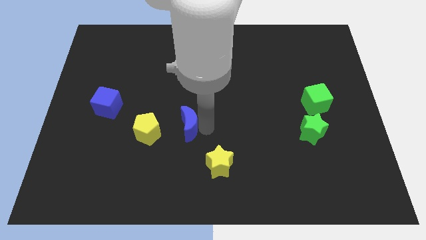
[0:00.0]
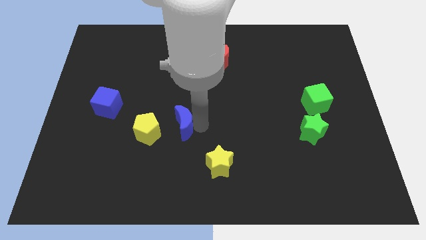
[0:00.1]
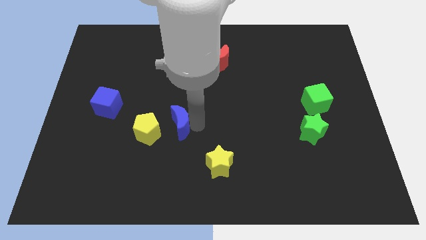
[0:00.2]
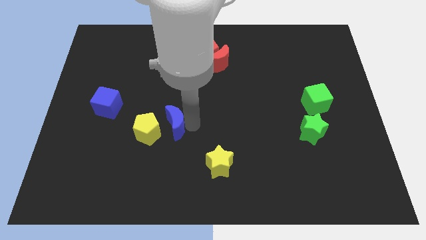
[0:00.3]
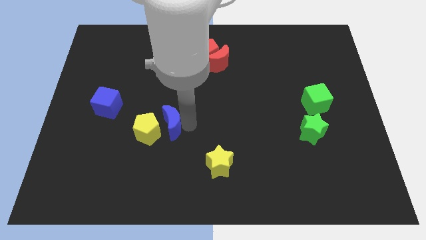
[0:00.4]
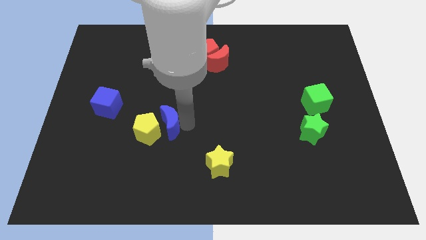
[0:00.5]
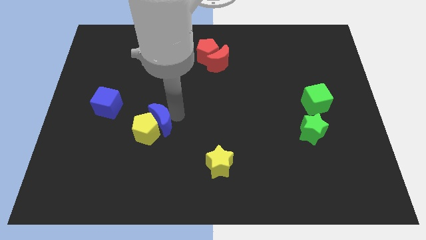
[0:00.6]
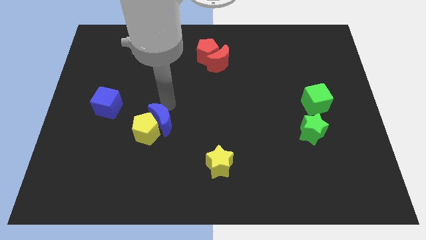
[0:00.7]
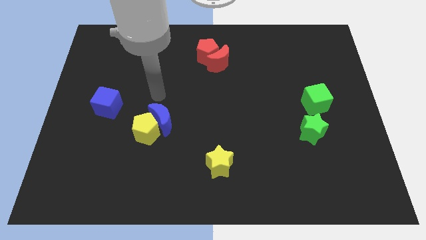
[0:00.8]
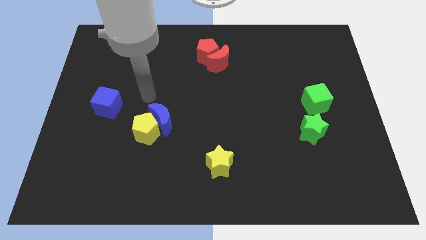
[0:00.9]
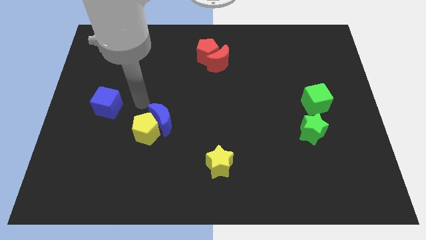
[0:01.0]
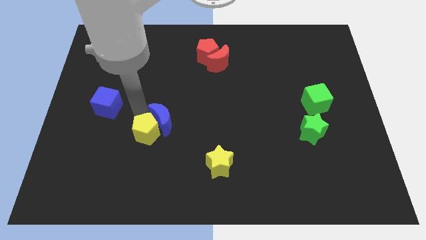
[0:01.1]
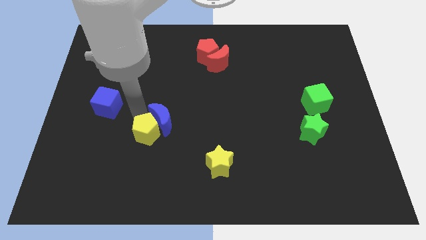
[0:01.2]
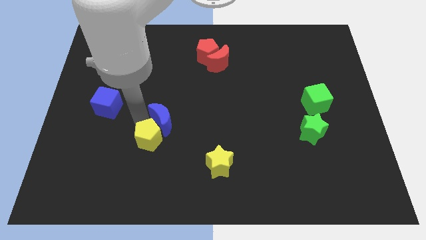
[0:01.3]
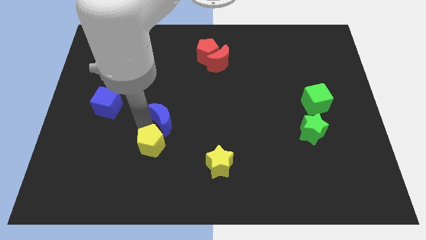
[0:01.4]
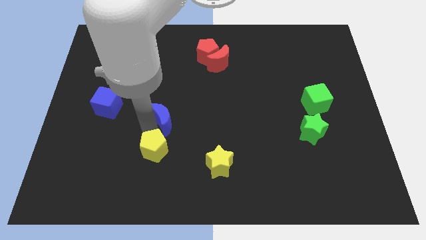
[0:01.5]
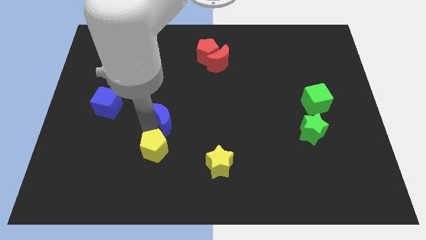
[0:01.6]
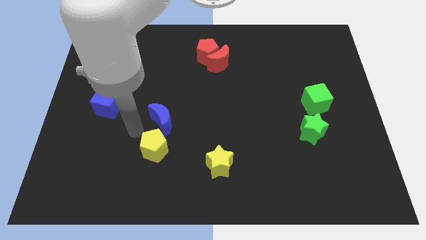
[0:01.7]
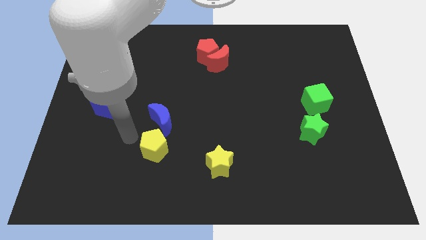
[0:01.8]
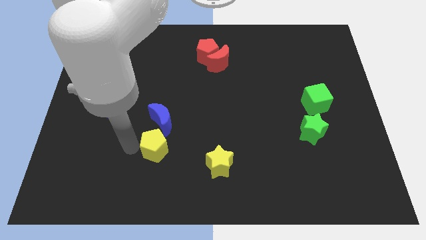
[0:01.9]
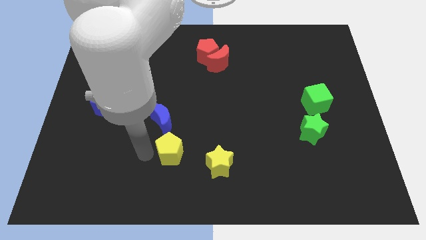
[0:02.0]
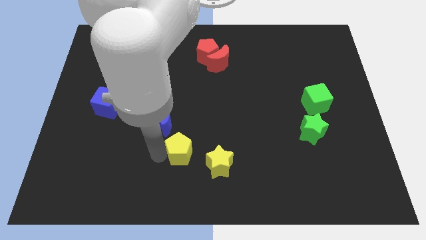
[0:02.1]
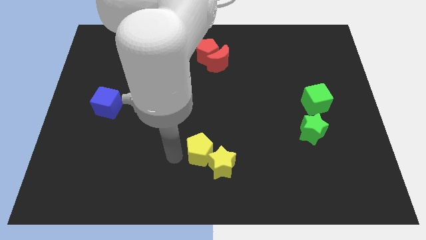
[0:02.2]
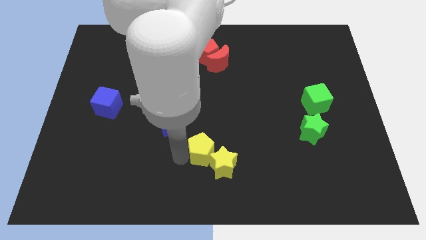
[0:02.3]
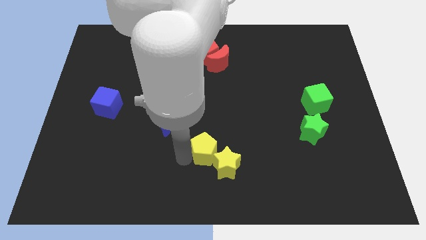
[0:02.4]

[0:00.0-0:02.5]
group up the yellow blocks at the bottom side of the red blocks

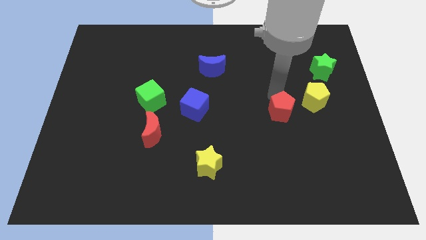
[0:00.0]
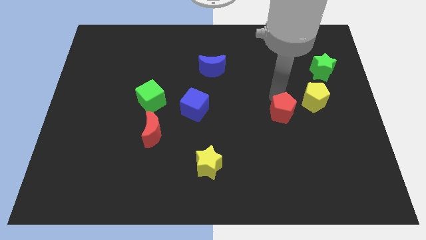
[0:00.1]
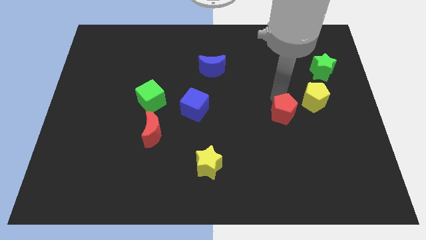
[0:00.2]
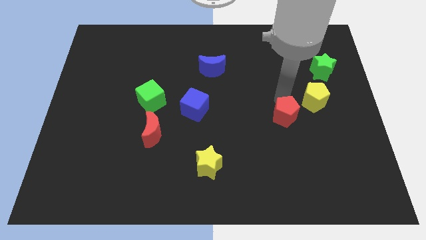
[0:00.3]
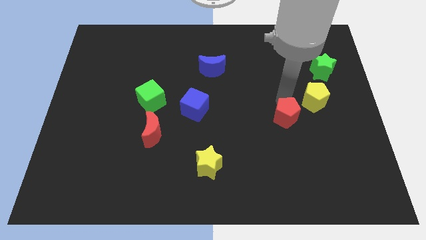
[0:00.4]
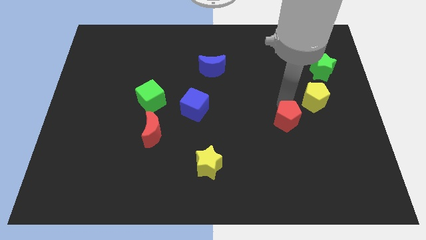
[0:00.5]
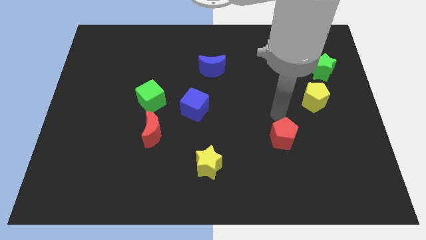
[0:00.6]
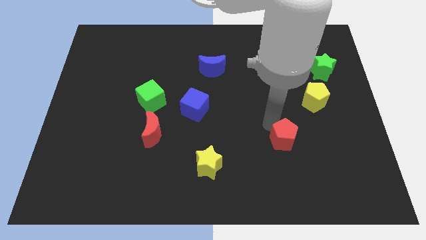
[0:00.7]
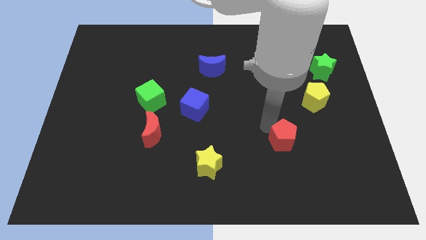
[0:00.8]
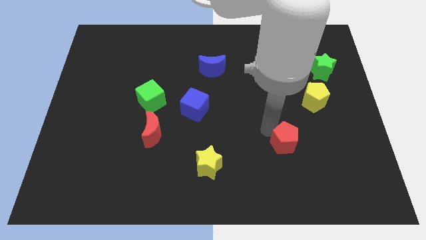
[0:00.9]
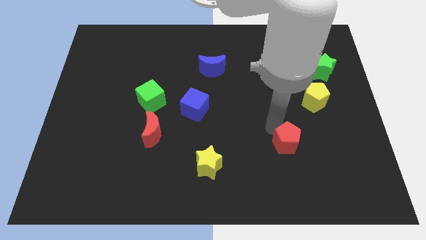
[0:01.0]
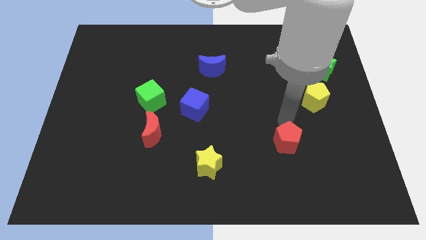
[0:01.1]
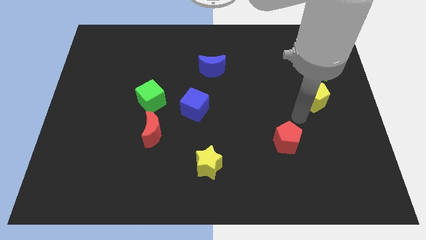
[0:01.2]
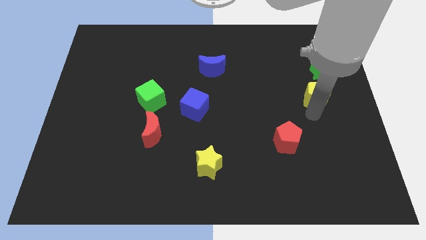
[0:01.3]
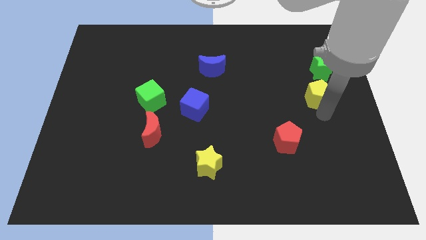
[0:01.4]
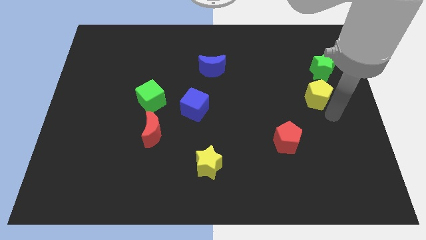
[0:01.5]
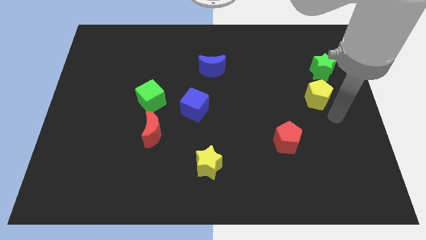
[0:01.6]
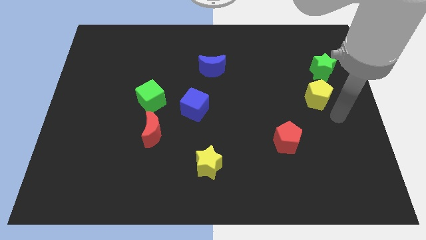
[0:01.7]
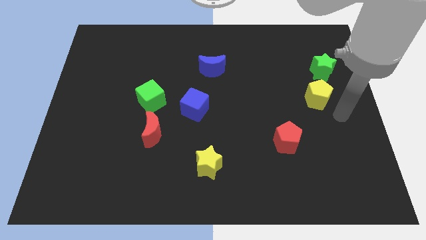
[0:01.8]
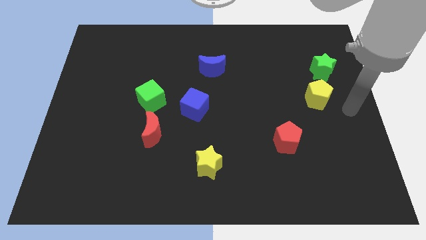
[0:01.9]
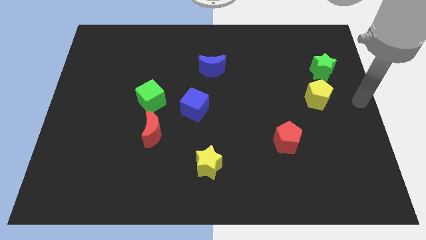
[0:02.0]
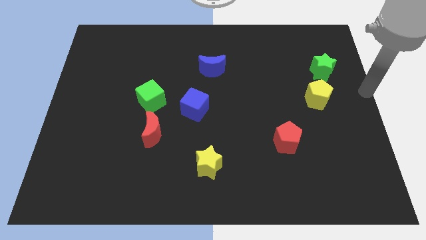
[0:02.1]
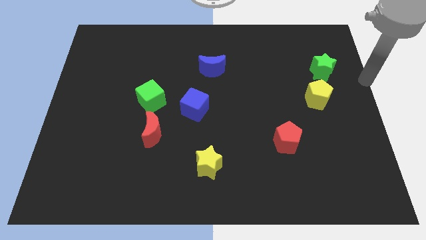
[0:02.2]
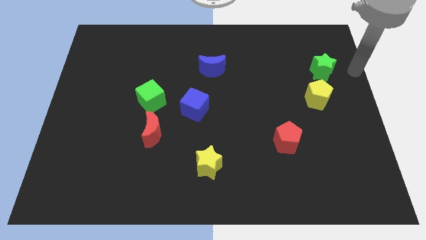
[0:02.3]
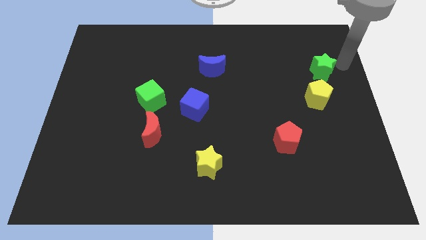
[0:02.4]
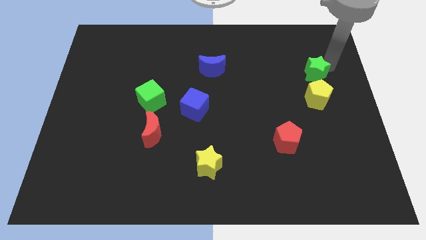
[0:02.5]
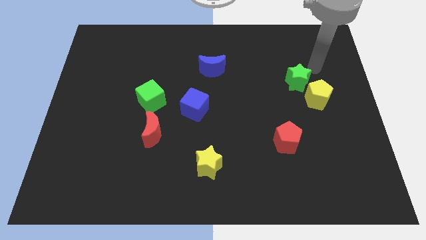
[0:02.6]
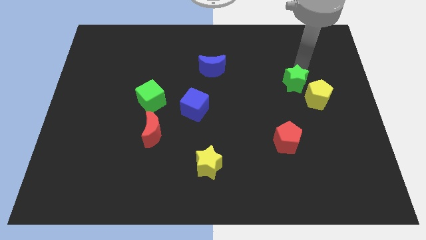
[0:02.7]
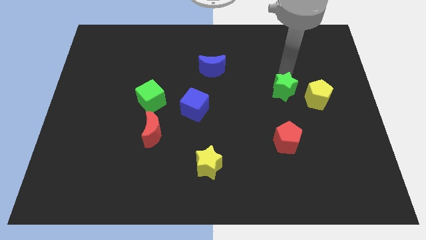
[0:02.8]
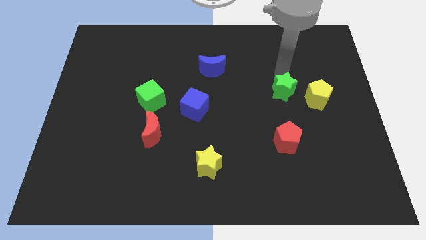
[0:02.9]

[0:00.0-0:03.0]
push green star above red pentagon

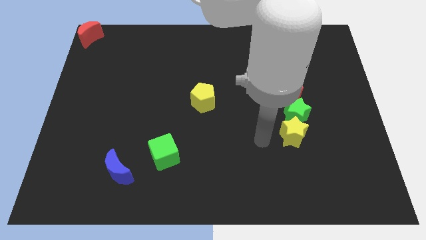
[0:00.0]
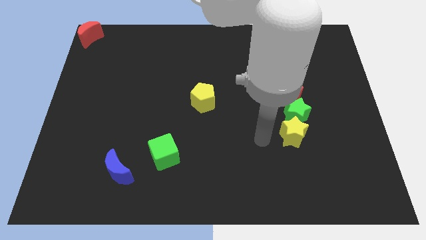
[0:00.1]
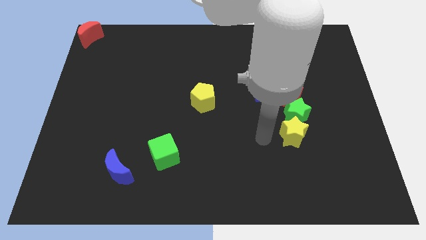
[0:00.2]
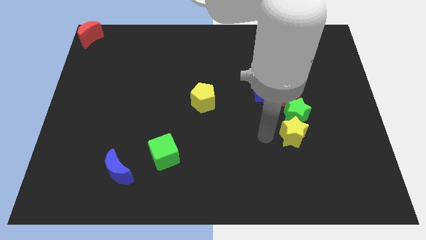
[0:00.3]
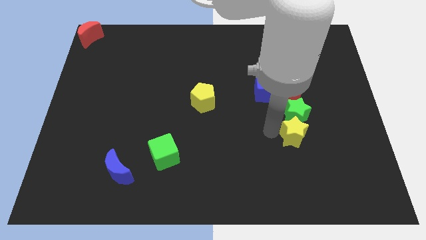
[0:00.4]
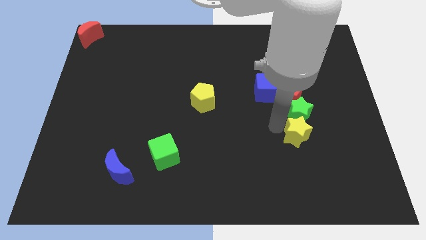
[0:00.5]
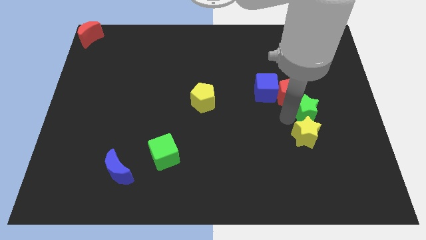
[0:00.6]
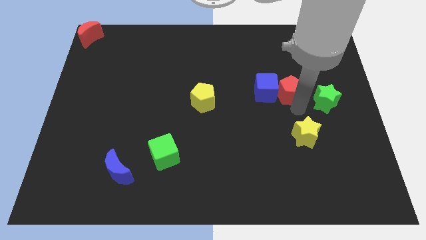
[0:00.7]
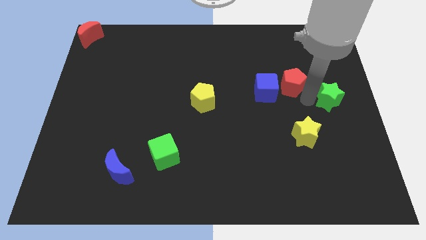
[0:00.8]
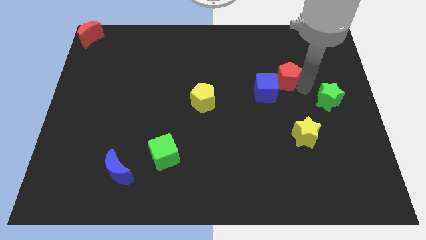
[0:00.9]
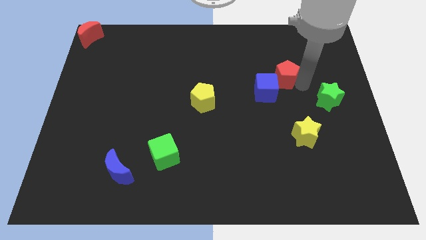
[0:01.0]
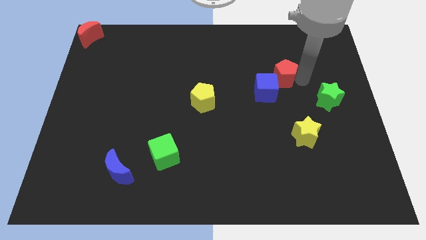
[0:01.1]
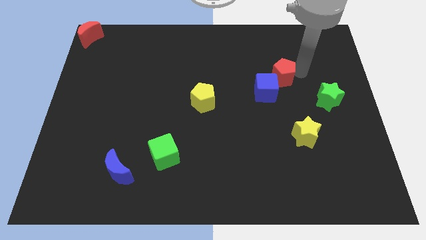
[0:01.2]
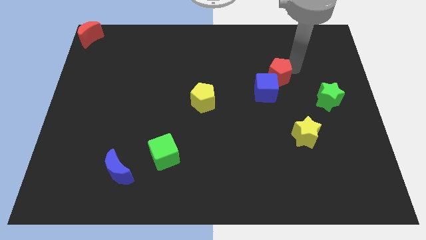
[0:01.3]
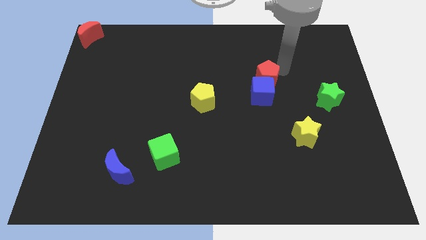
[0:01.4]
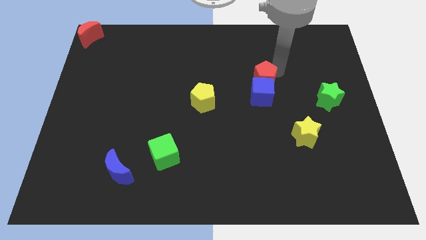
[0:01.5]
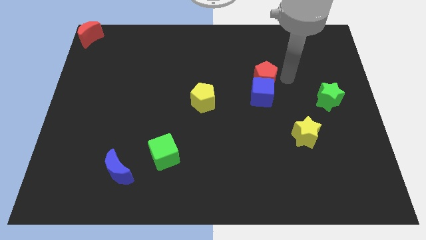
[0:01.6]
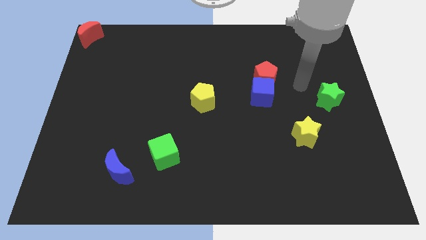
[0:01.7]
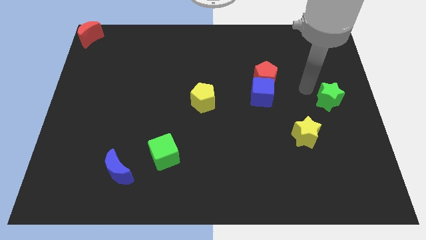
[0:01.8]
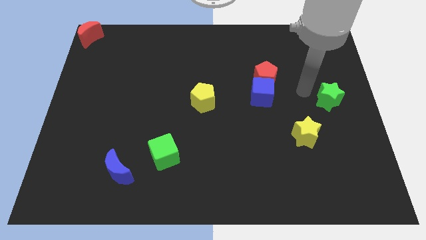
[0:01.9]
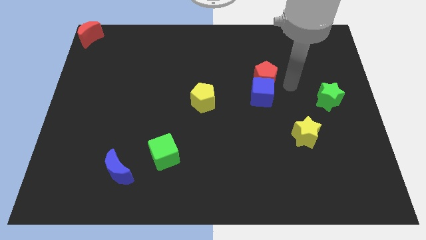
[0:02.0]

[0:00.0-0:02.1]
separate the green star from the yellow star

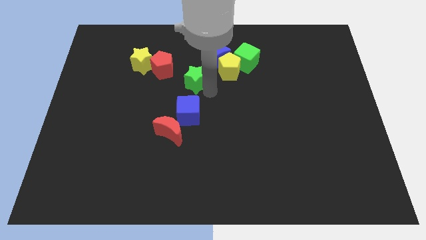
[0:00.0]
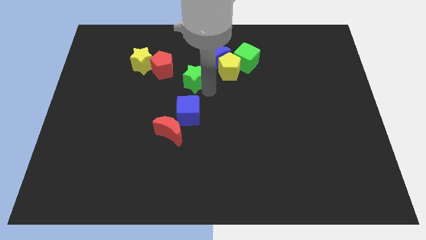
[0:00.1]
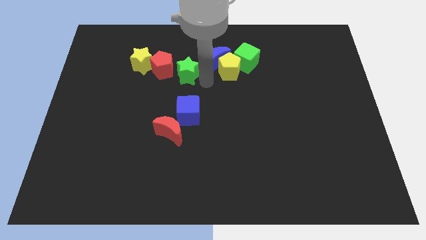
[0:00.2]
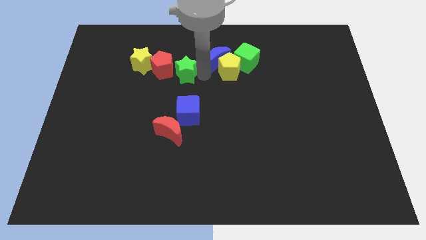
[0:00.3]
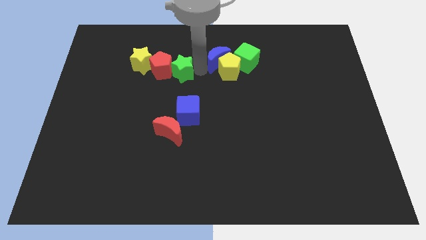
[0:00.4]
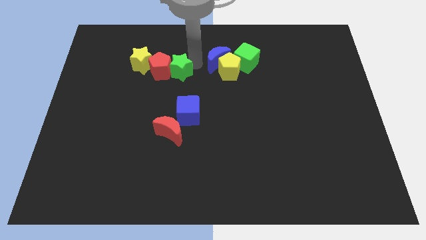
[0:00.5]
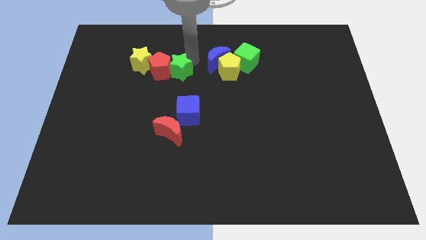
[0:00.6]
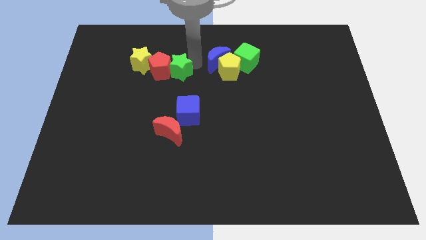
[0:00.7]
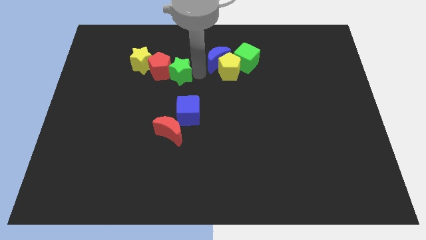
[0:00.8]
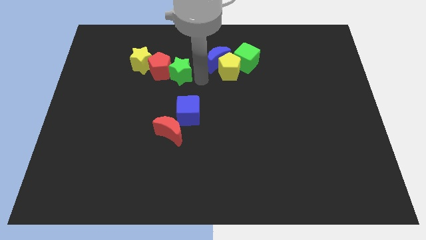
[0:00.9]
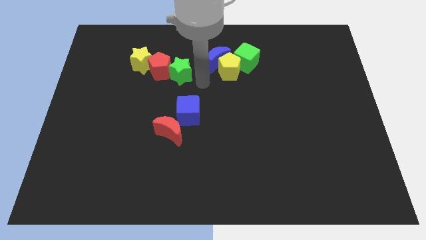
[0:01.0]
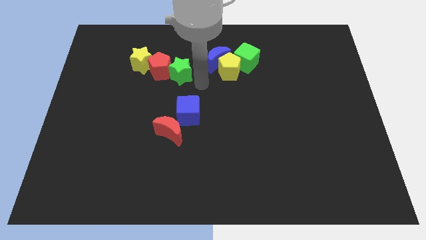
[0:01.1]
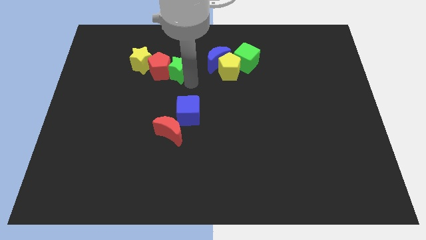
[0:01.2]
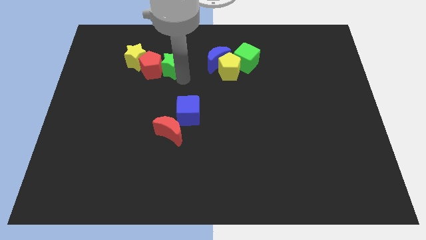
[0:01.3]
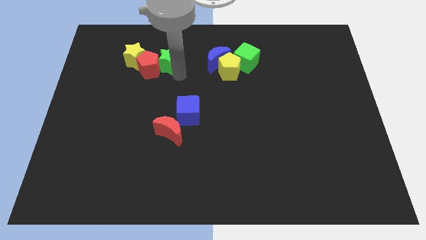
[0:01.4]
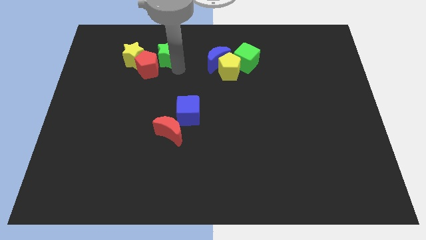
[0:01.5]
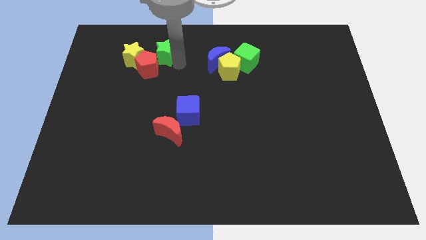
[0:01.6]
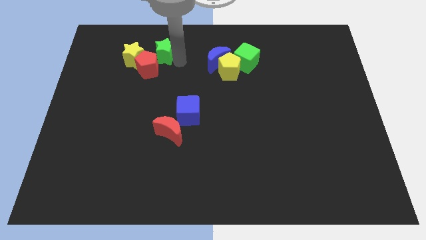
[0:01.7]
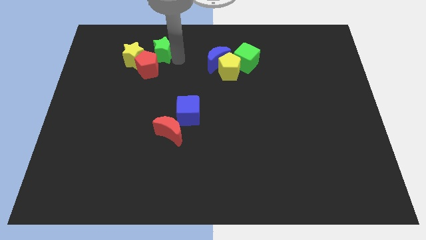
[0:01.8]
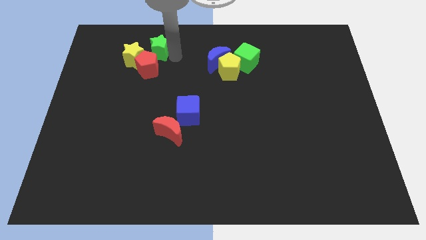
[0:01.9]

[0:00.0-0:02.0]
place the green star diagonal to the red pentagon
